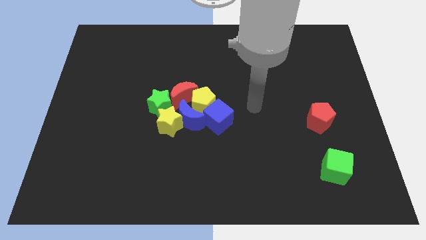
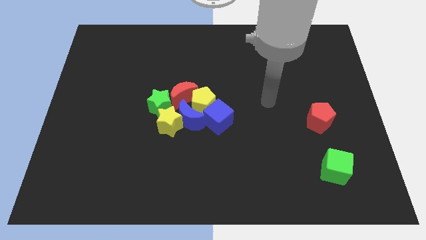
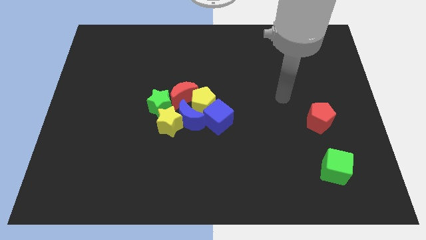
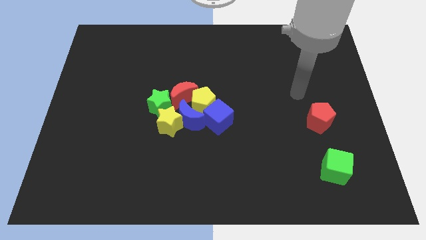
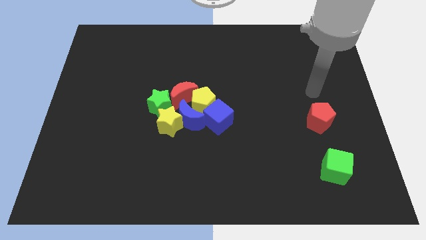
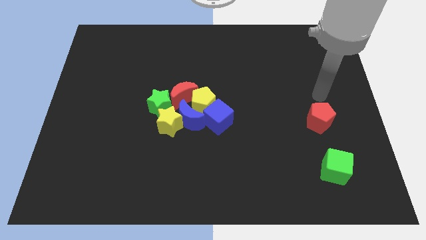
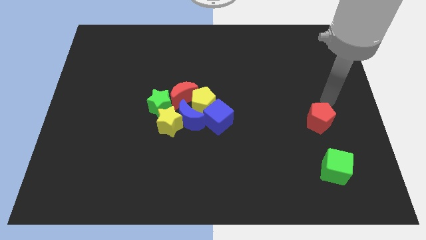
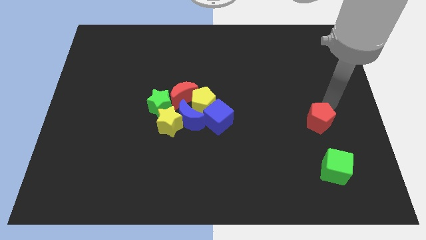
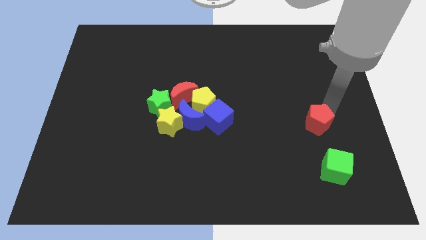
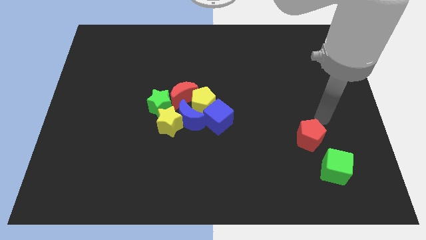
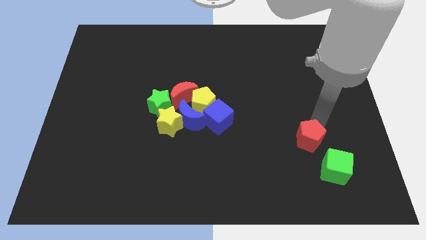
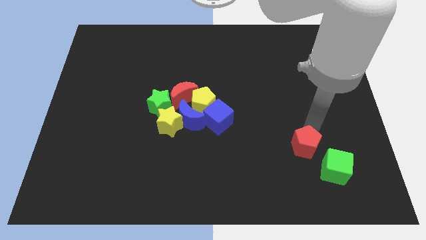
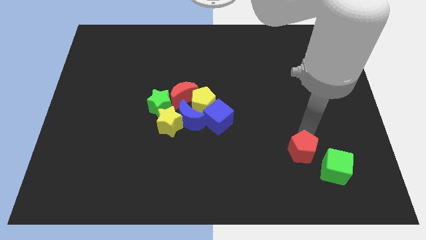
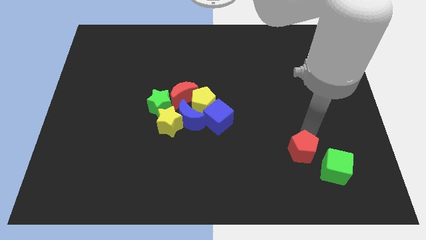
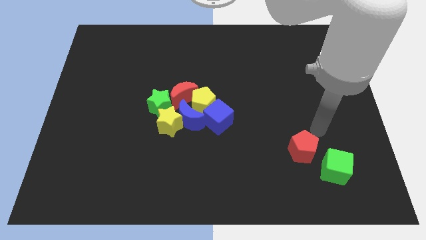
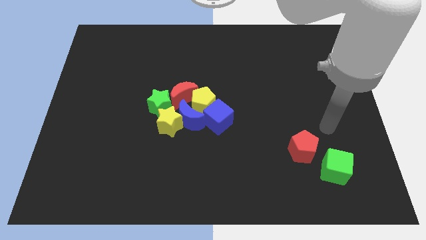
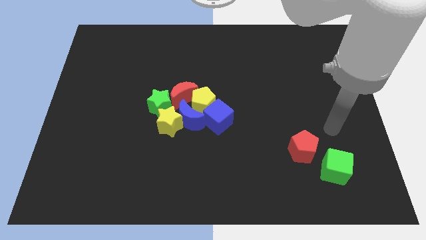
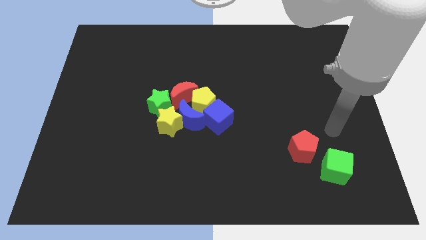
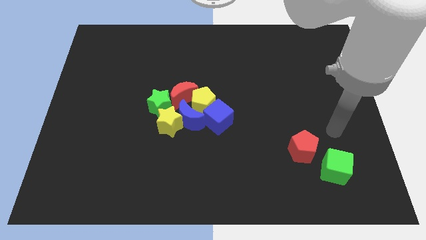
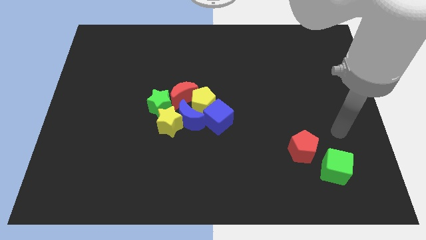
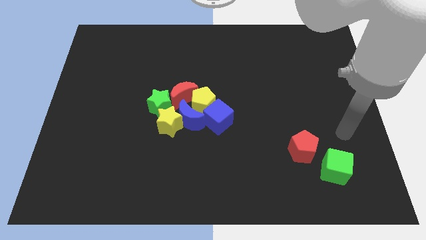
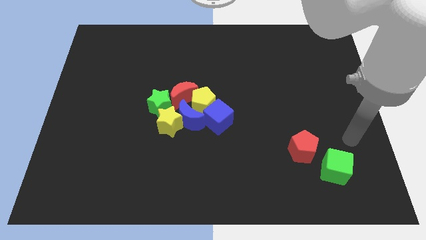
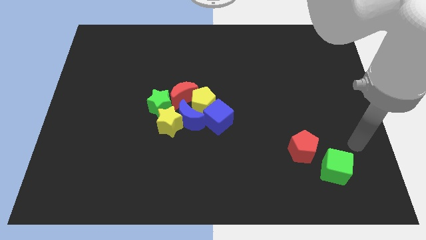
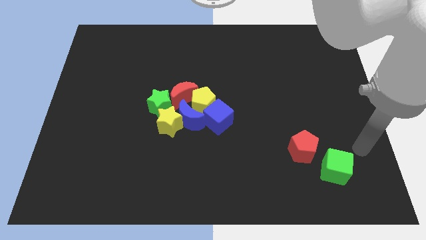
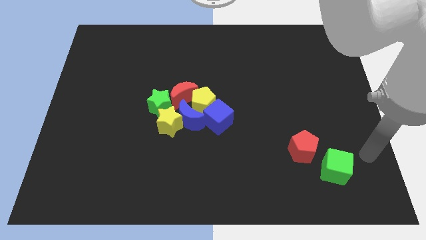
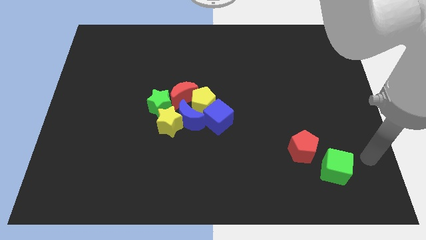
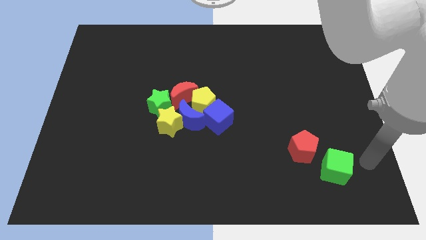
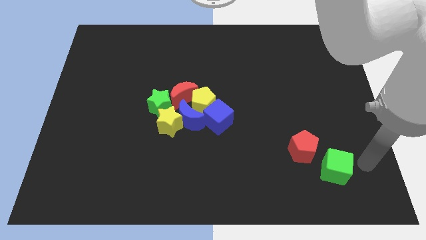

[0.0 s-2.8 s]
move the red pentagon near to the green cube

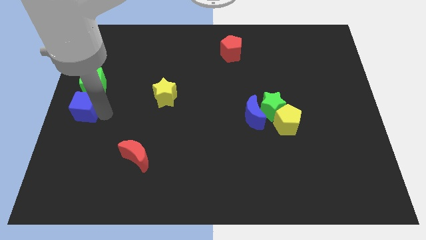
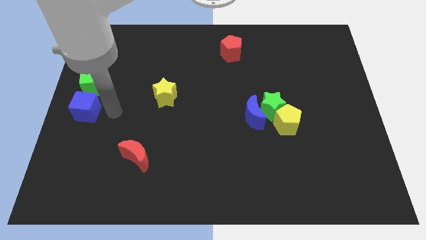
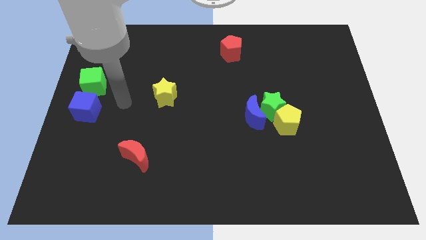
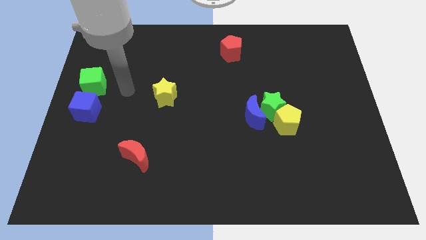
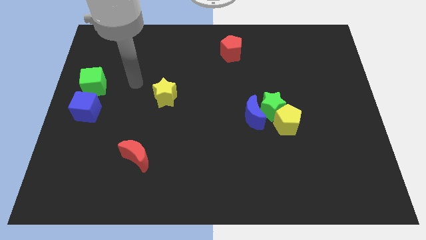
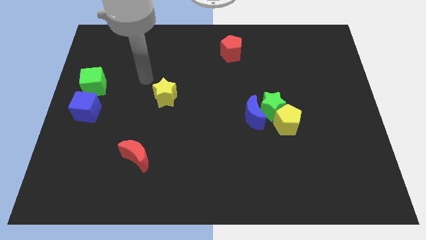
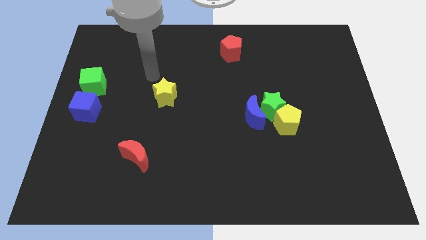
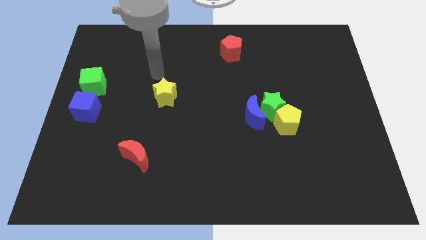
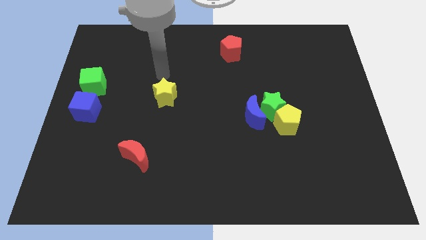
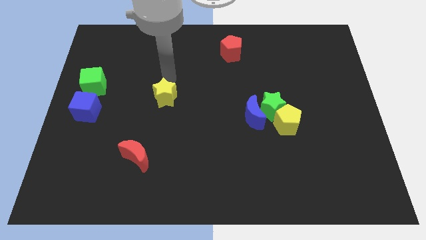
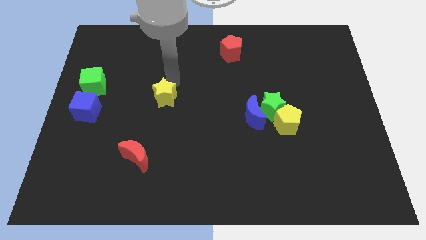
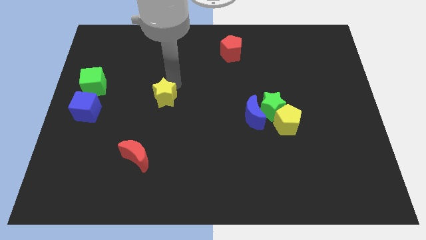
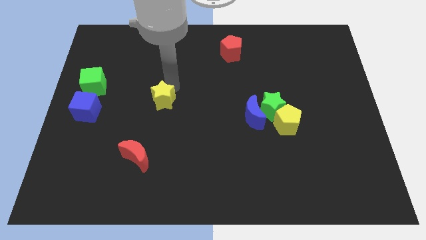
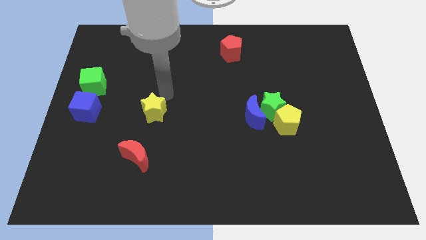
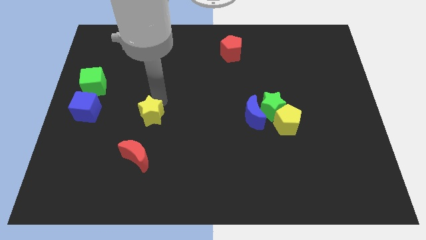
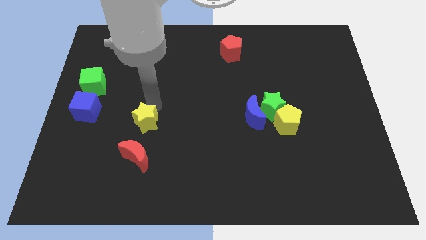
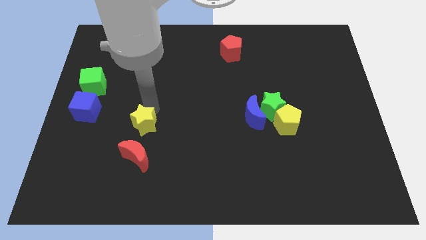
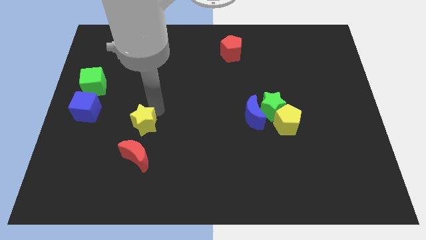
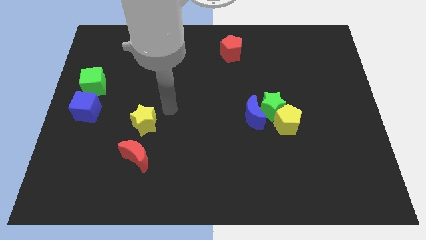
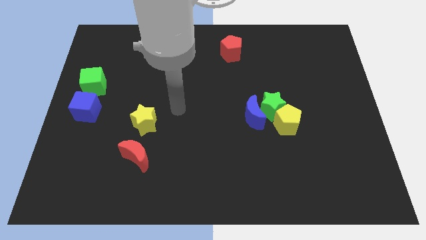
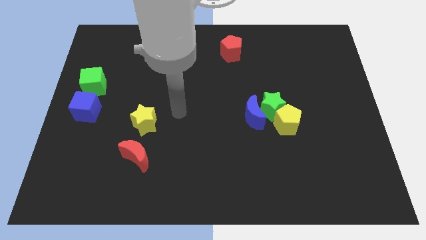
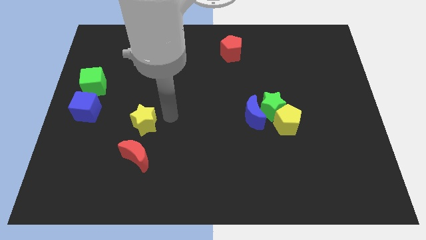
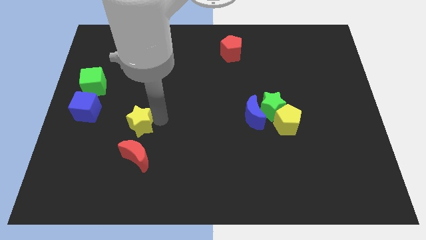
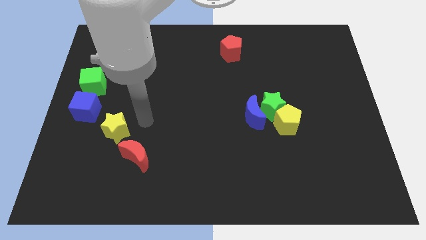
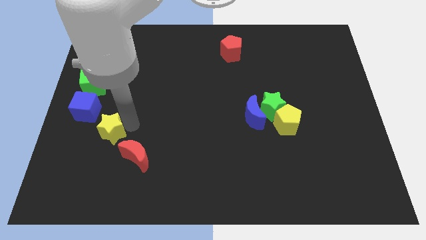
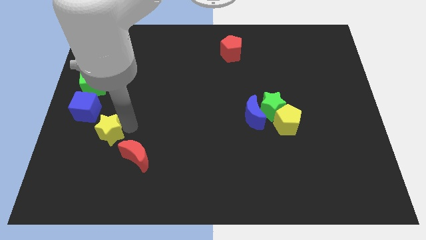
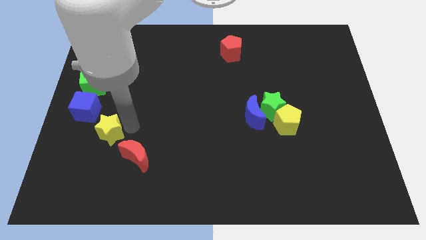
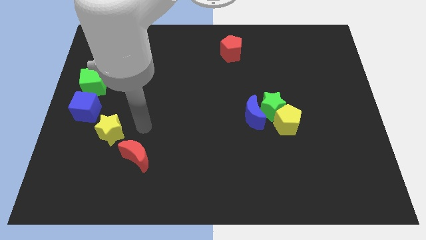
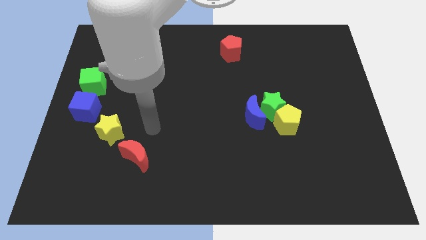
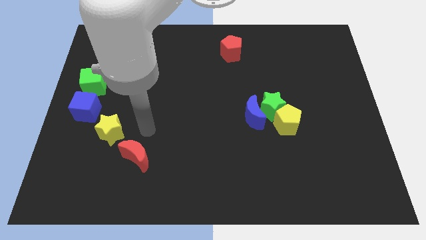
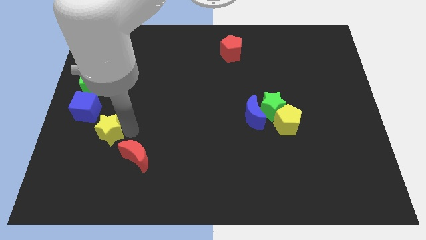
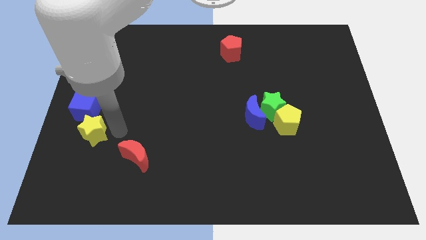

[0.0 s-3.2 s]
push the yellow star to the bottom right of the blue cube

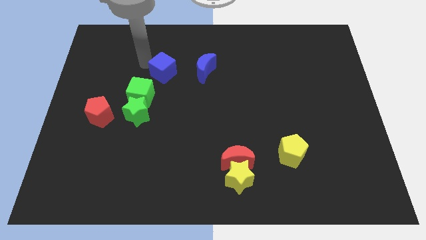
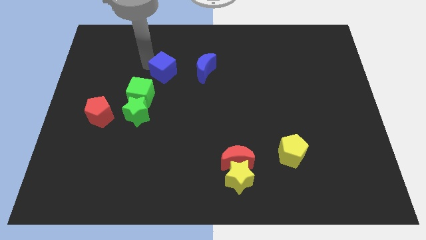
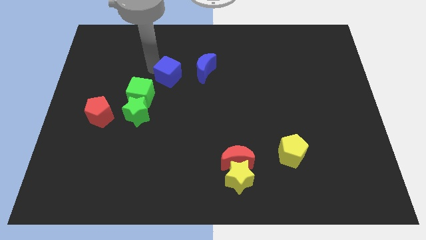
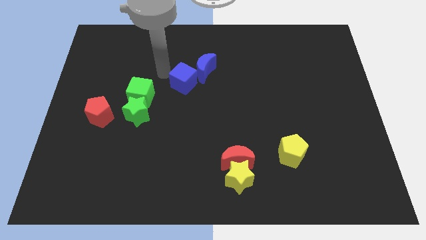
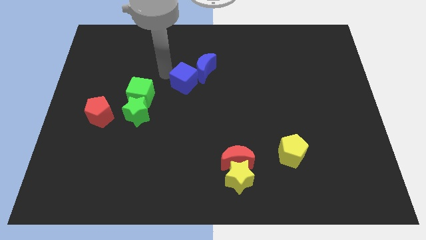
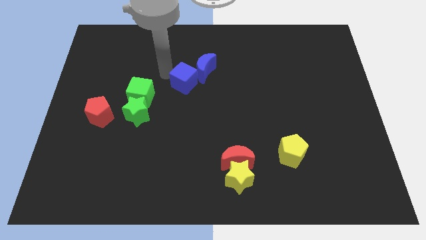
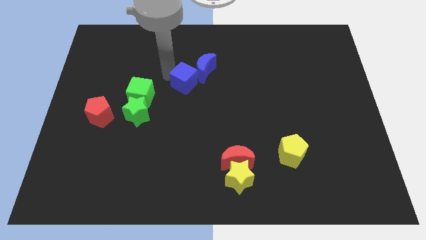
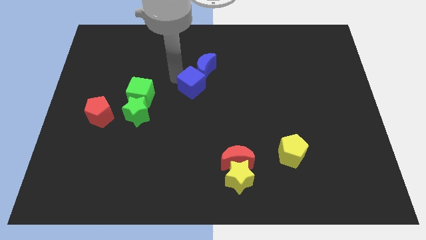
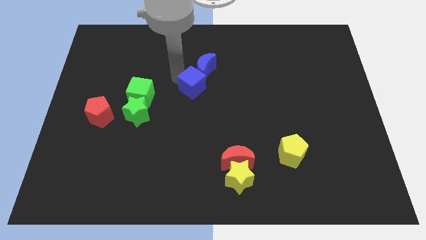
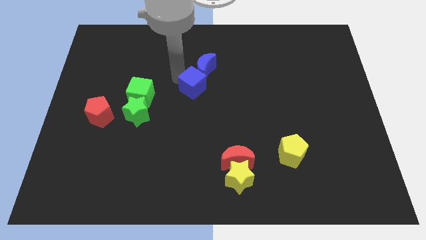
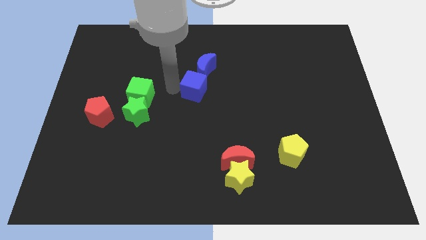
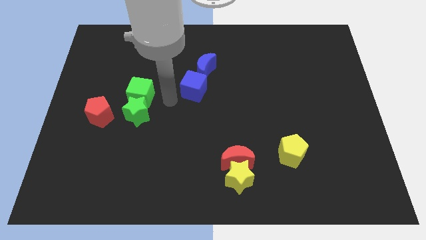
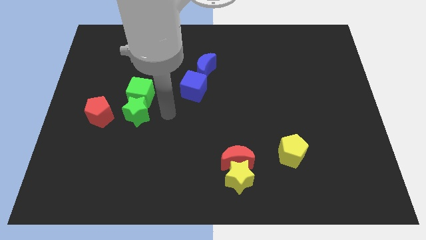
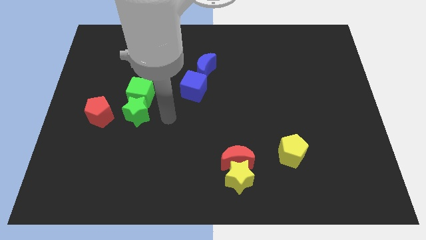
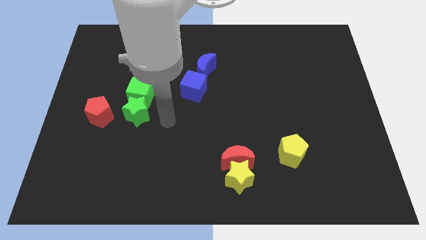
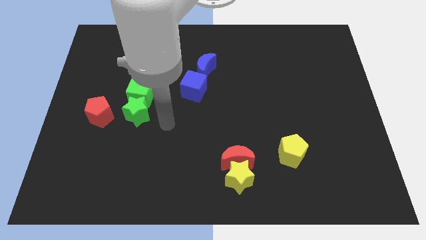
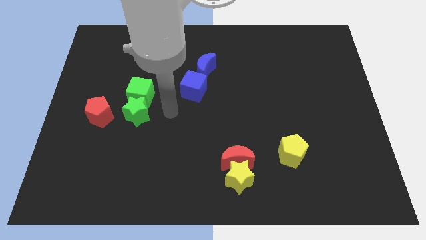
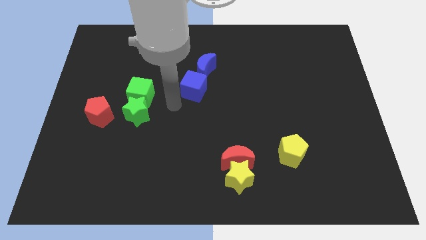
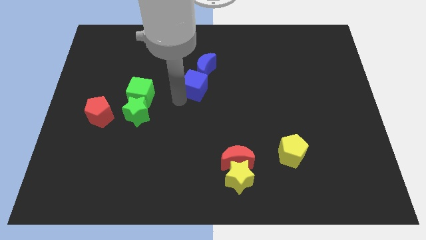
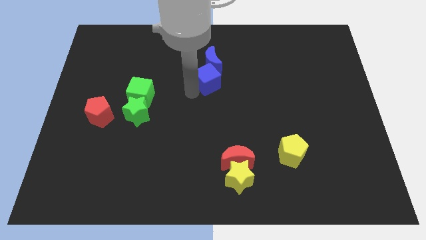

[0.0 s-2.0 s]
put the blue cube diagonal to the blue moon

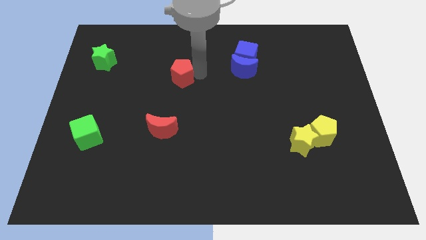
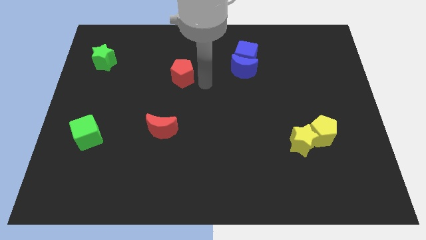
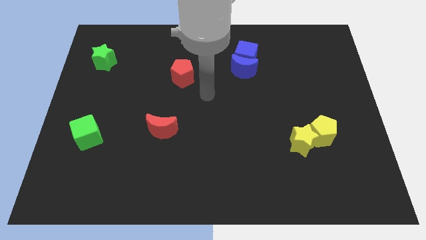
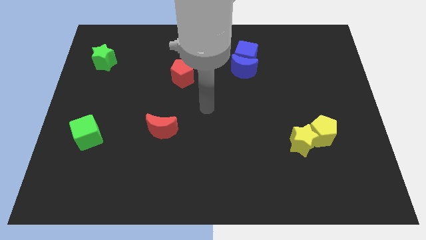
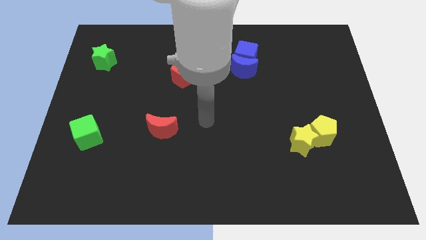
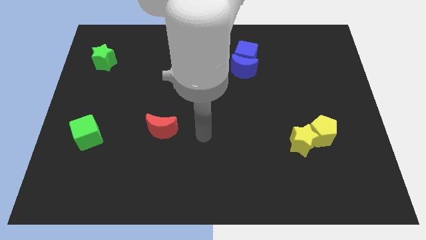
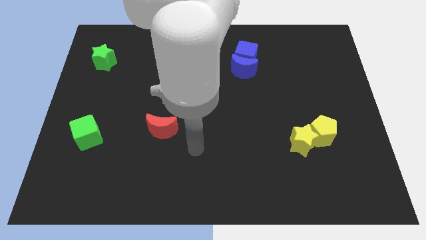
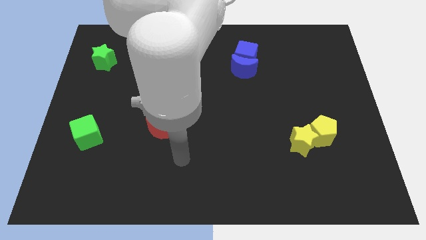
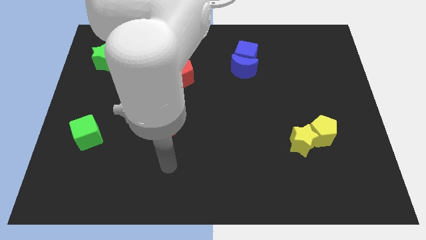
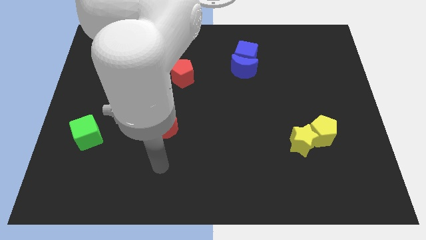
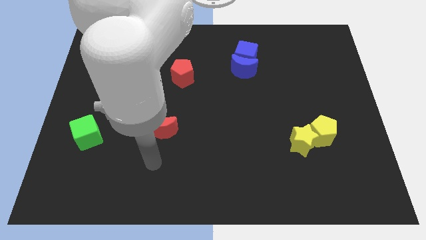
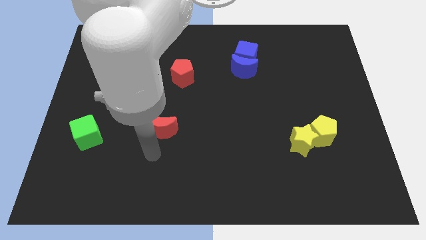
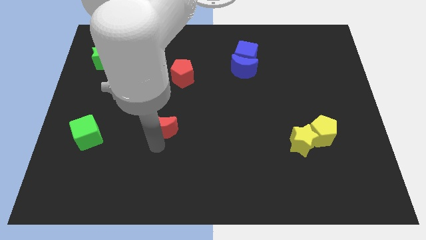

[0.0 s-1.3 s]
point the arm below the red moon
